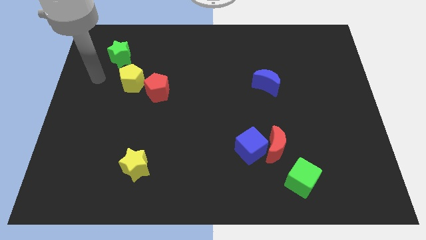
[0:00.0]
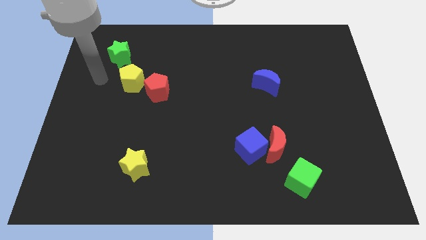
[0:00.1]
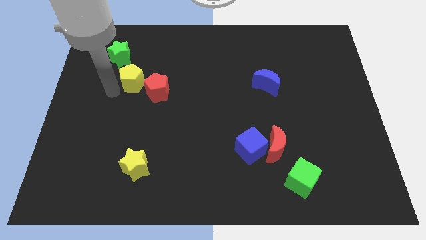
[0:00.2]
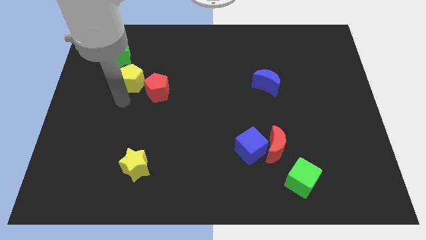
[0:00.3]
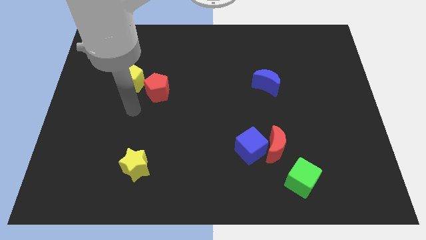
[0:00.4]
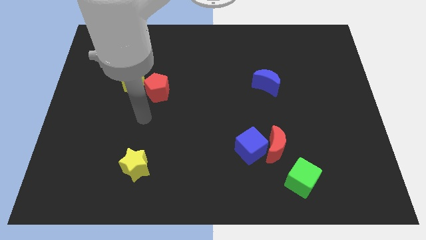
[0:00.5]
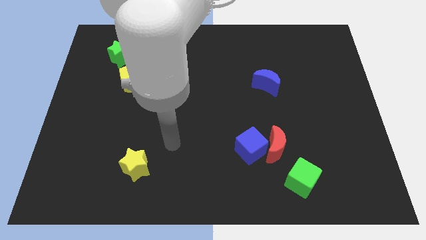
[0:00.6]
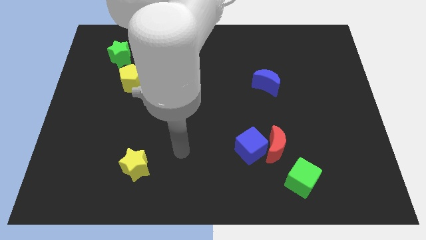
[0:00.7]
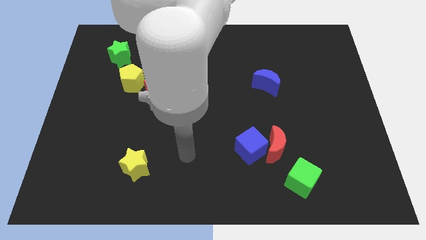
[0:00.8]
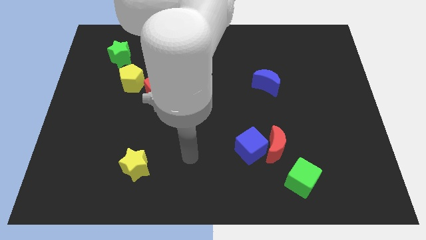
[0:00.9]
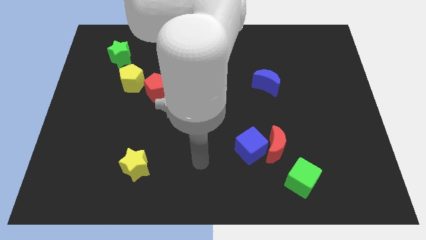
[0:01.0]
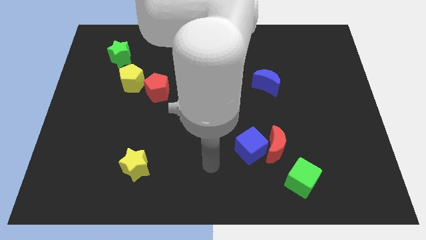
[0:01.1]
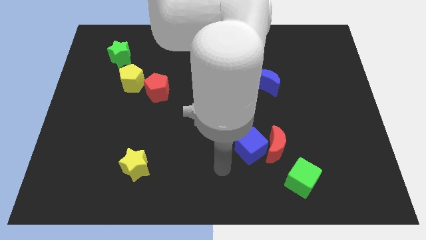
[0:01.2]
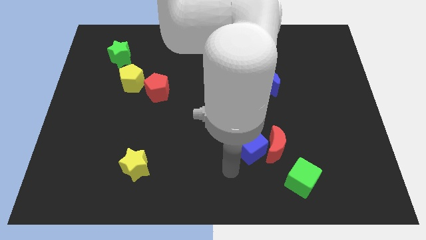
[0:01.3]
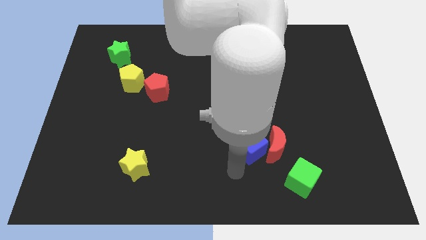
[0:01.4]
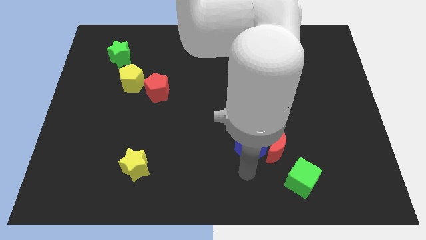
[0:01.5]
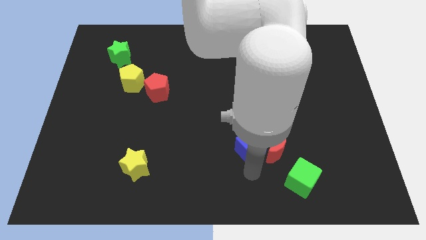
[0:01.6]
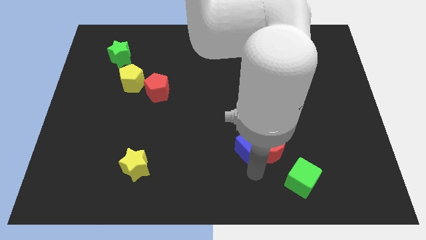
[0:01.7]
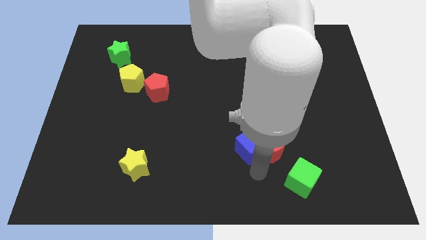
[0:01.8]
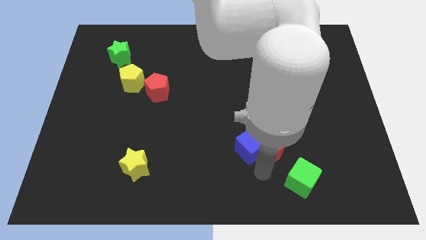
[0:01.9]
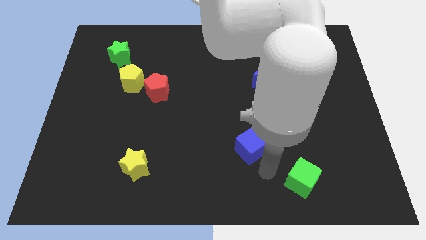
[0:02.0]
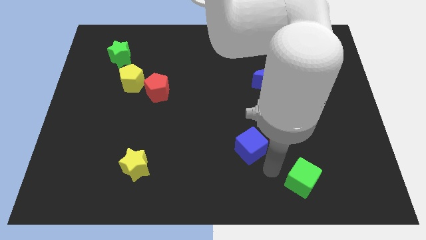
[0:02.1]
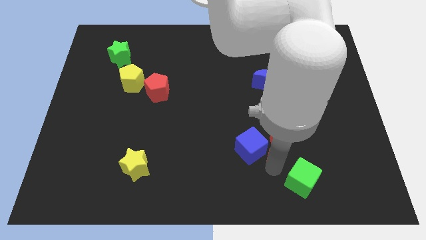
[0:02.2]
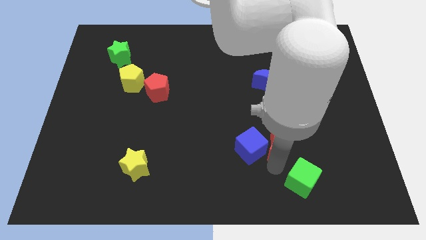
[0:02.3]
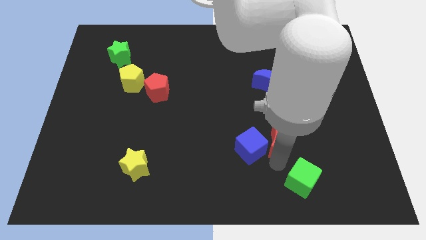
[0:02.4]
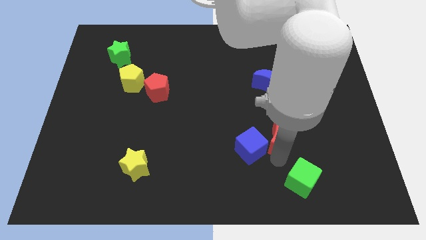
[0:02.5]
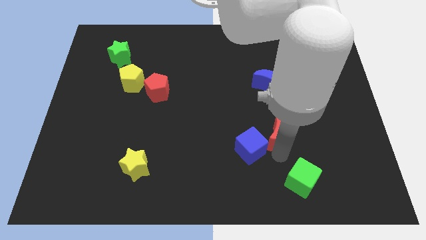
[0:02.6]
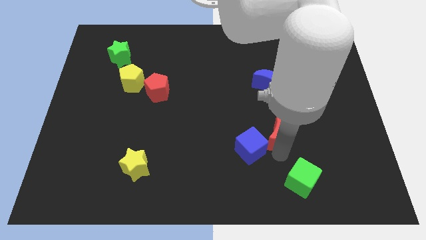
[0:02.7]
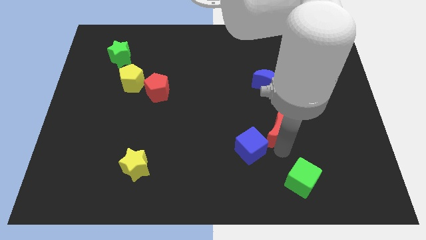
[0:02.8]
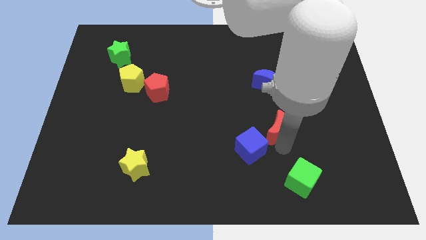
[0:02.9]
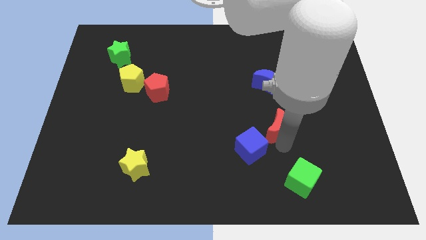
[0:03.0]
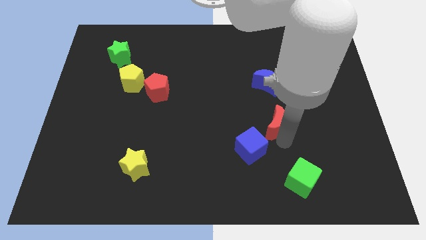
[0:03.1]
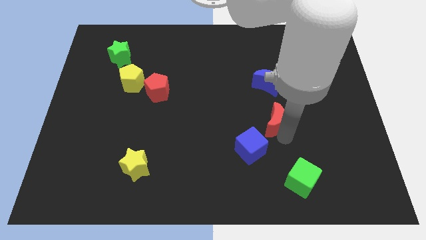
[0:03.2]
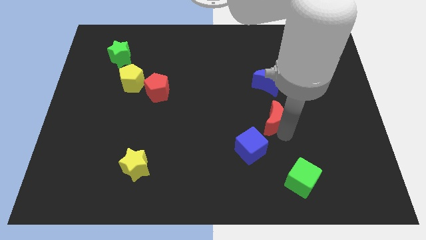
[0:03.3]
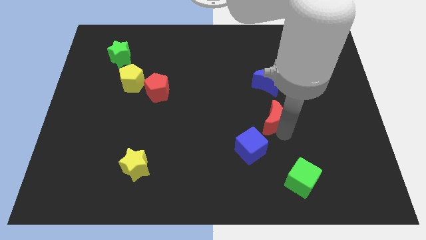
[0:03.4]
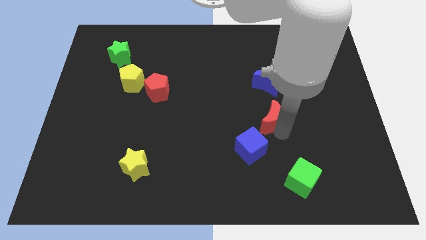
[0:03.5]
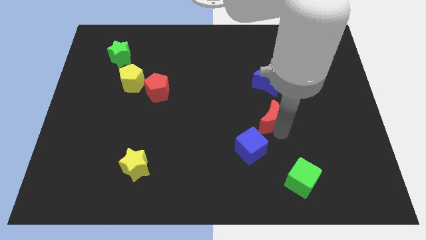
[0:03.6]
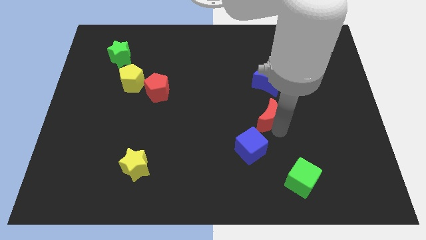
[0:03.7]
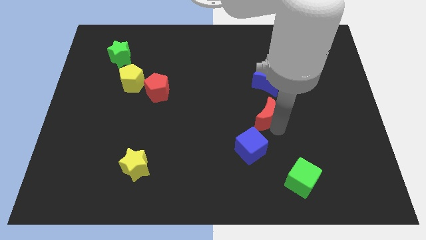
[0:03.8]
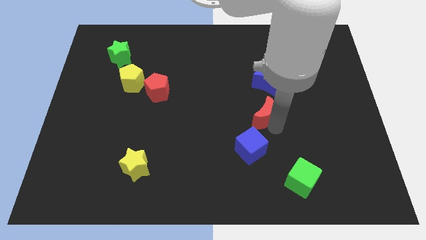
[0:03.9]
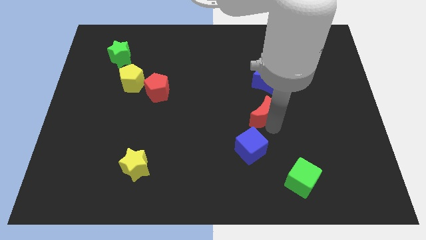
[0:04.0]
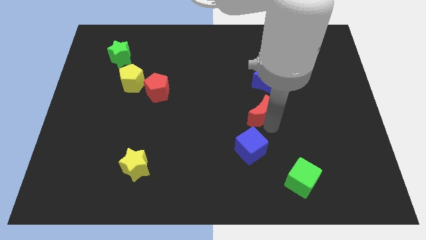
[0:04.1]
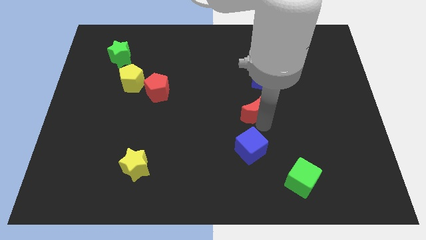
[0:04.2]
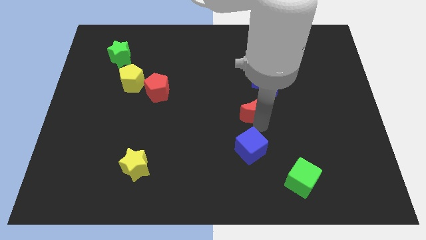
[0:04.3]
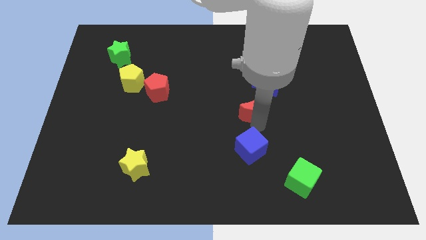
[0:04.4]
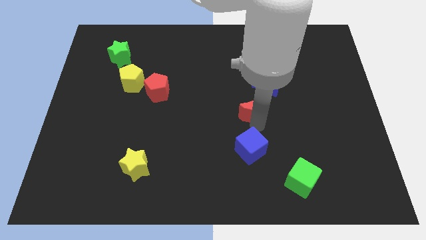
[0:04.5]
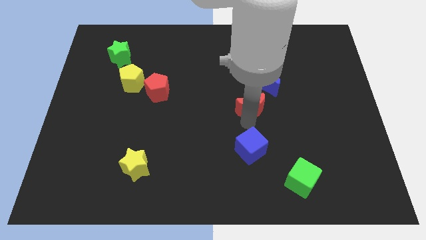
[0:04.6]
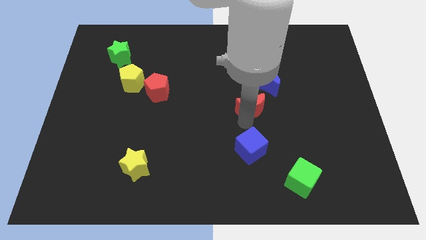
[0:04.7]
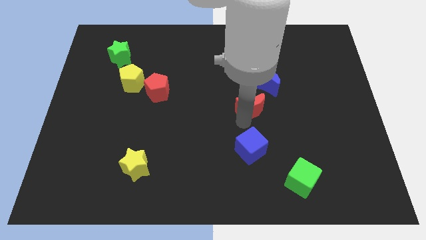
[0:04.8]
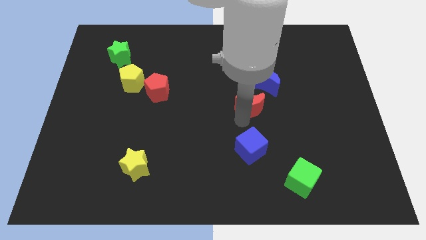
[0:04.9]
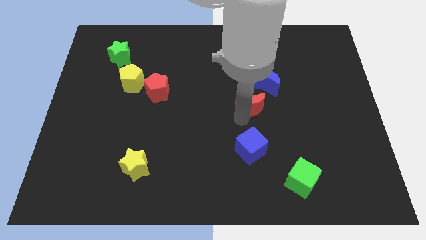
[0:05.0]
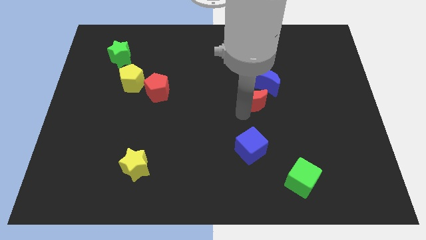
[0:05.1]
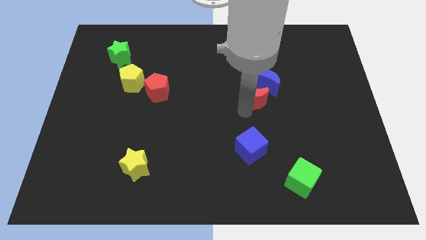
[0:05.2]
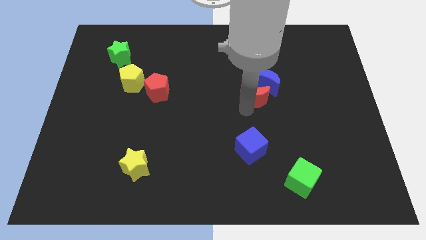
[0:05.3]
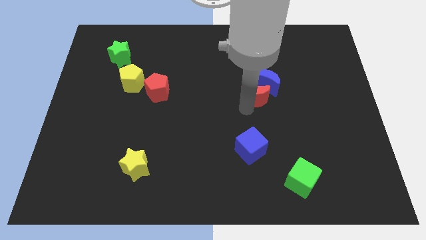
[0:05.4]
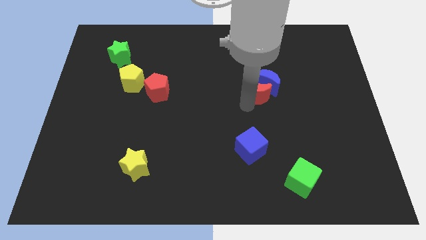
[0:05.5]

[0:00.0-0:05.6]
slide the red moon to the blue moon

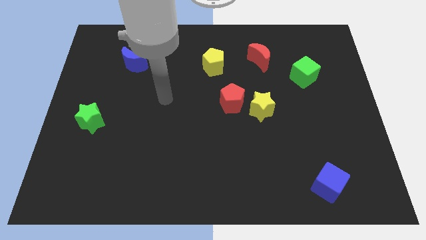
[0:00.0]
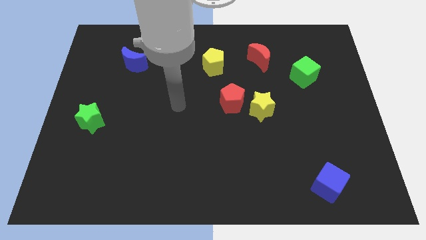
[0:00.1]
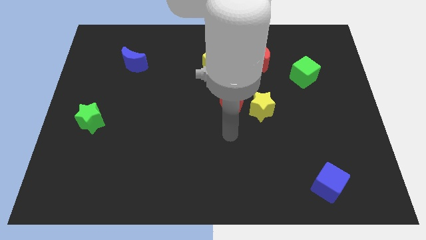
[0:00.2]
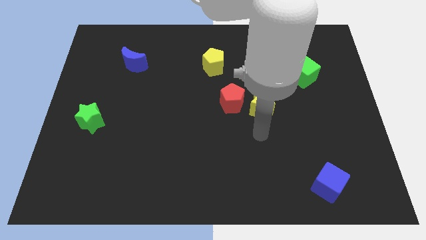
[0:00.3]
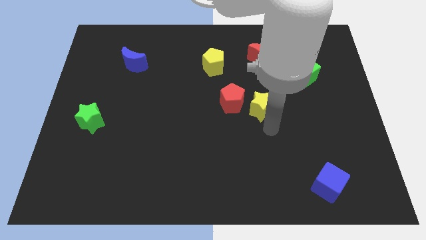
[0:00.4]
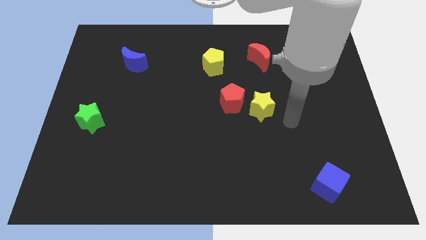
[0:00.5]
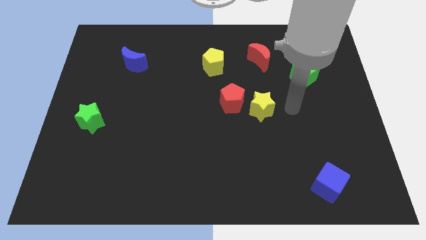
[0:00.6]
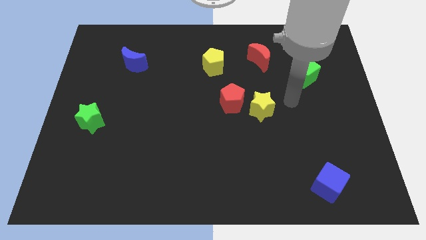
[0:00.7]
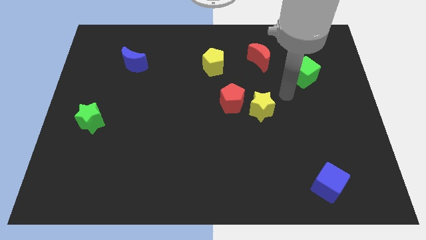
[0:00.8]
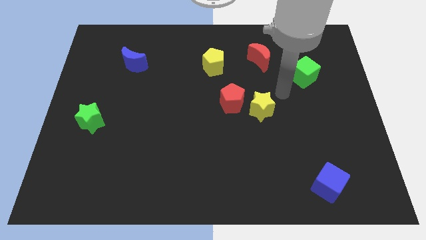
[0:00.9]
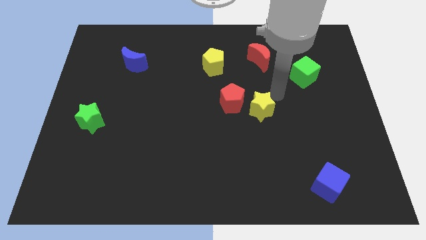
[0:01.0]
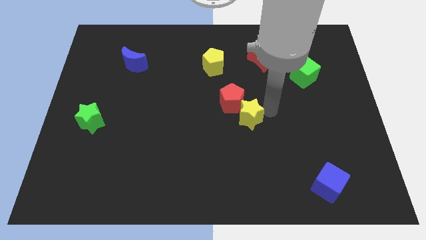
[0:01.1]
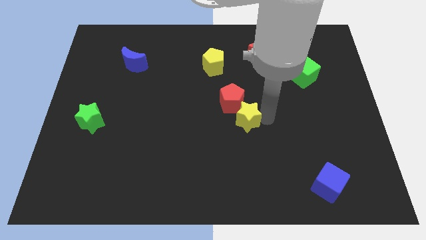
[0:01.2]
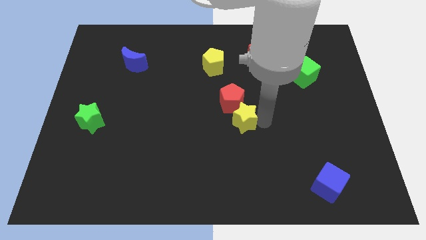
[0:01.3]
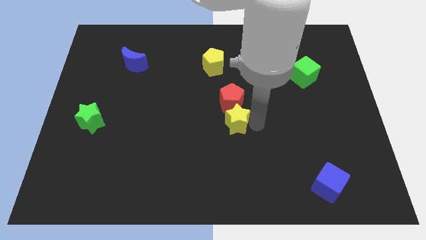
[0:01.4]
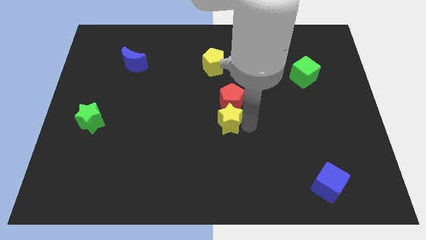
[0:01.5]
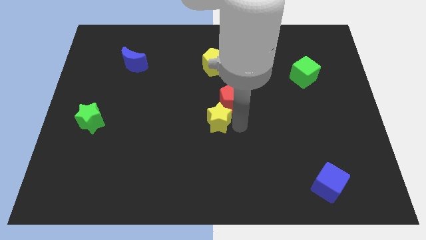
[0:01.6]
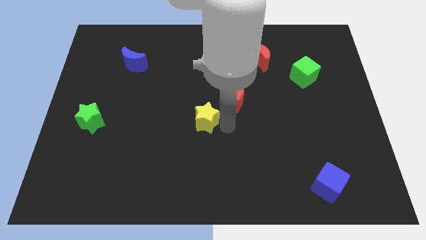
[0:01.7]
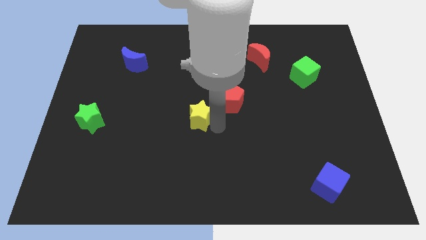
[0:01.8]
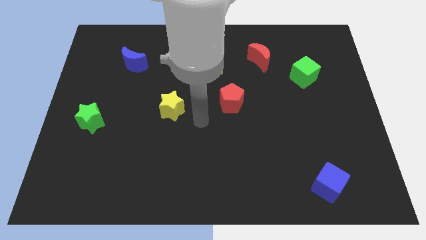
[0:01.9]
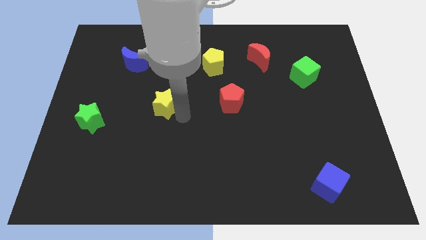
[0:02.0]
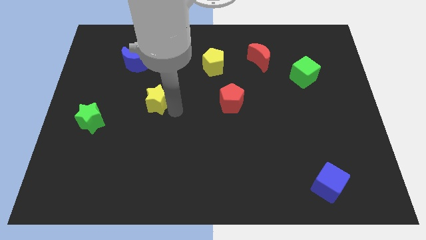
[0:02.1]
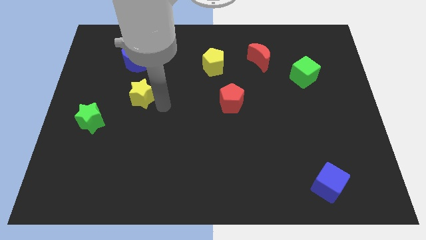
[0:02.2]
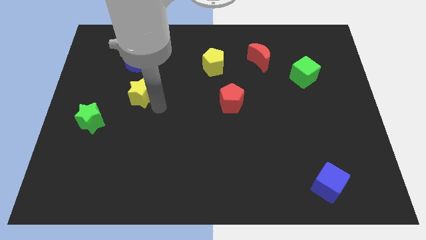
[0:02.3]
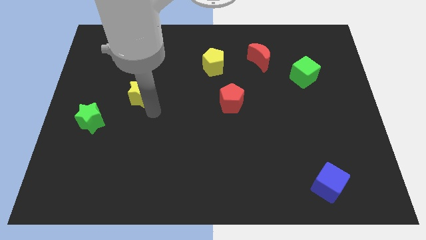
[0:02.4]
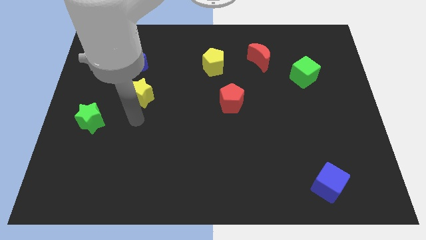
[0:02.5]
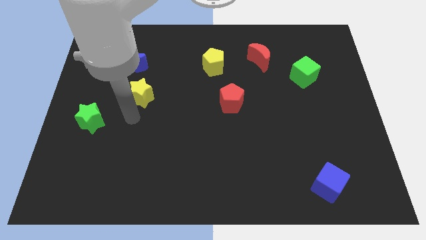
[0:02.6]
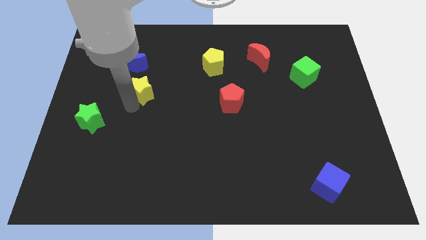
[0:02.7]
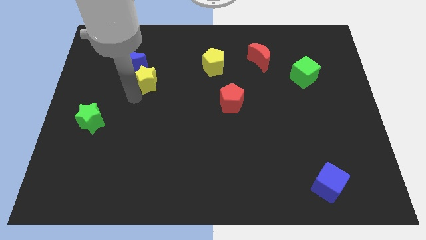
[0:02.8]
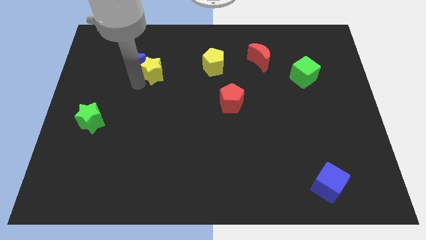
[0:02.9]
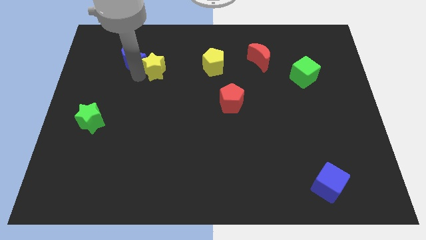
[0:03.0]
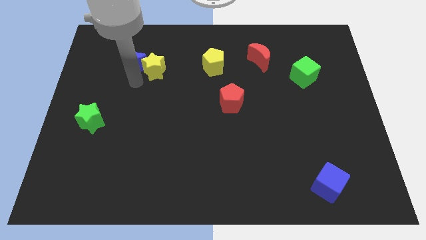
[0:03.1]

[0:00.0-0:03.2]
move the yellow star to the blue moon
